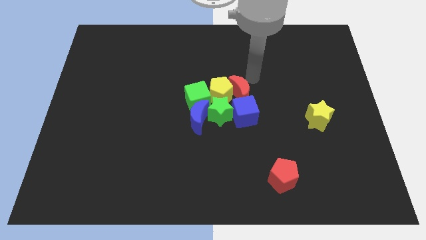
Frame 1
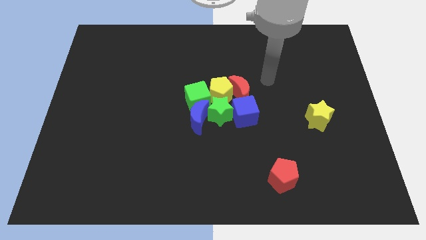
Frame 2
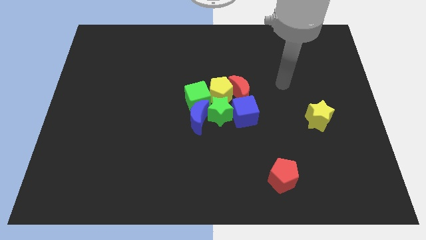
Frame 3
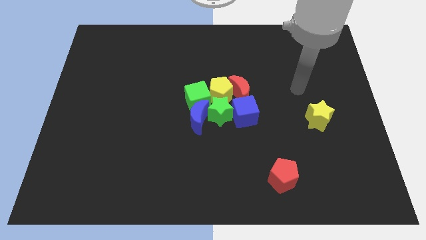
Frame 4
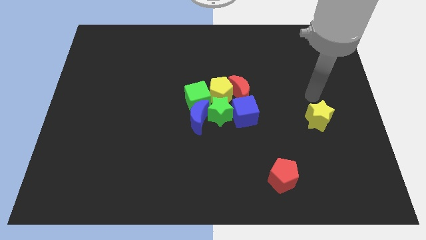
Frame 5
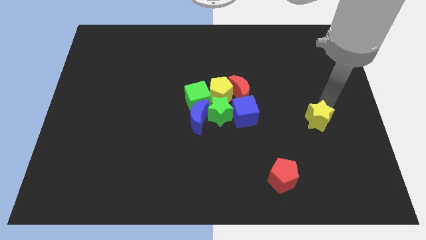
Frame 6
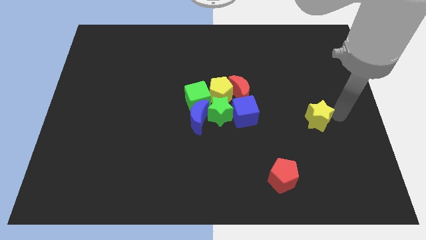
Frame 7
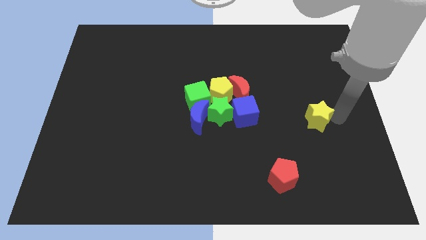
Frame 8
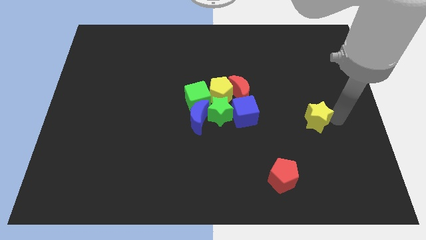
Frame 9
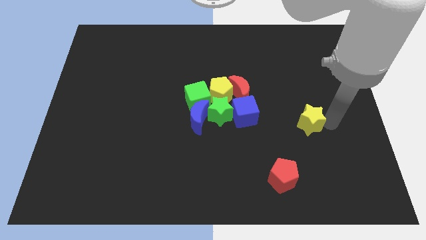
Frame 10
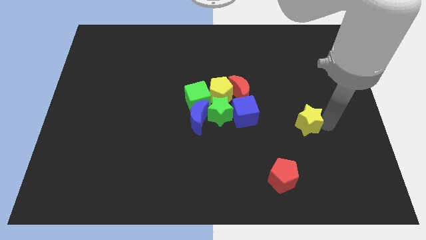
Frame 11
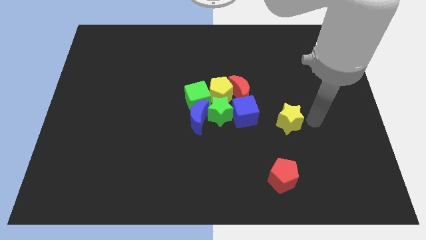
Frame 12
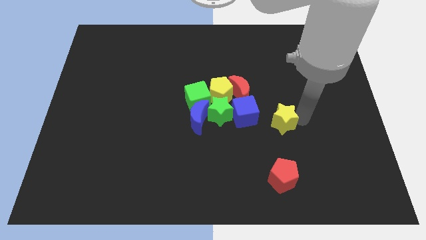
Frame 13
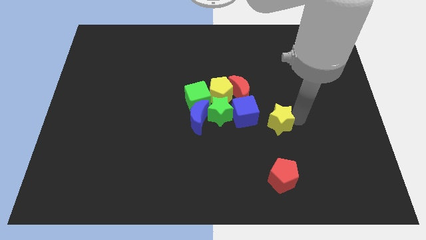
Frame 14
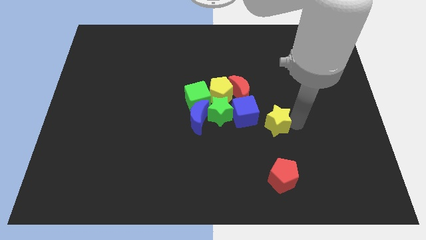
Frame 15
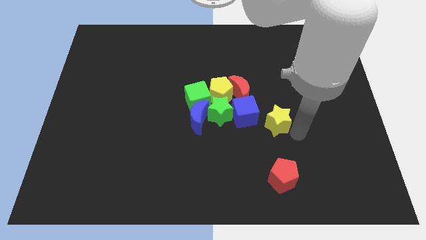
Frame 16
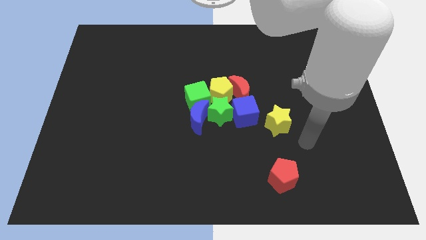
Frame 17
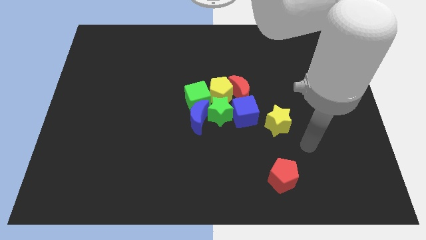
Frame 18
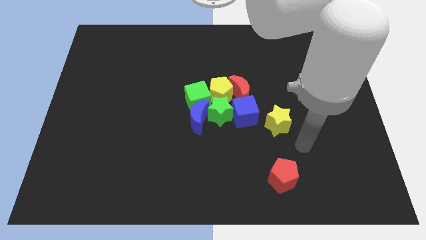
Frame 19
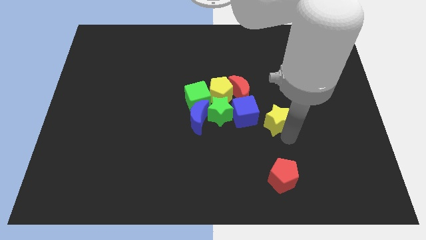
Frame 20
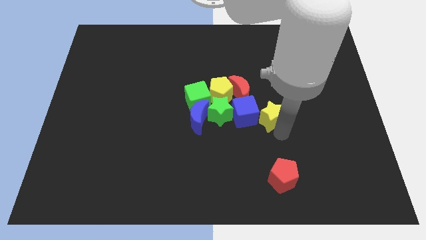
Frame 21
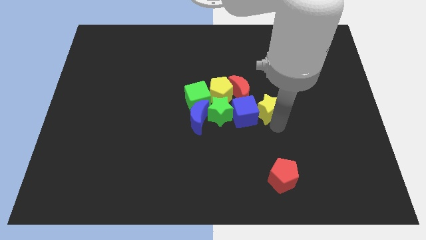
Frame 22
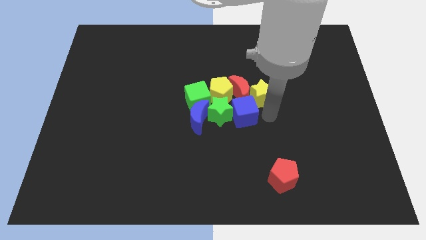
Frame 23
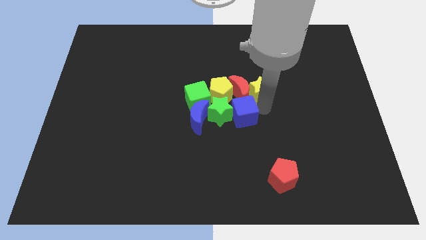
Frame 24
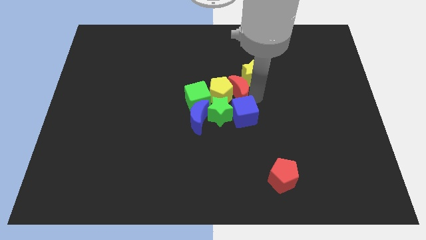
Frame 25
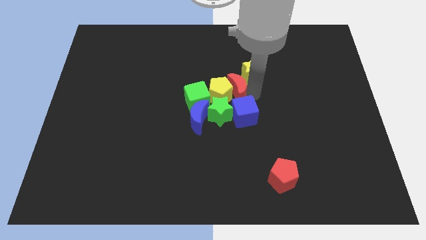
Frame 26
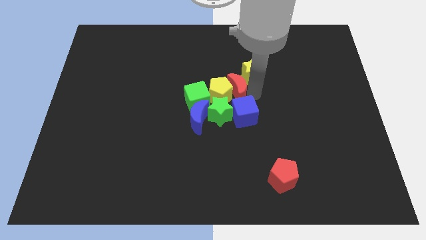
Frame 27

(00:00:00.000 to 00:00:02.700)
push the yellow star towards the red moon

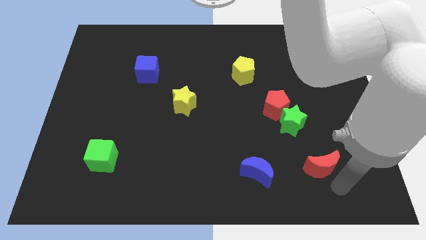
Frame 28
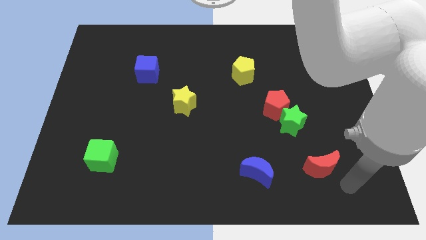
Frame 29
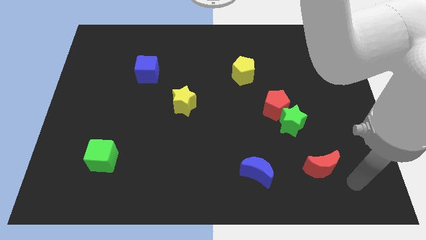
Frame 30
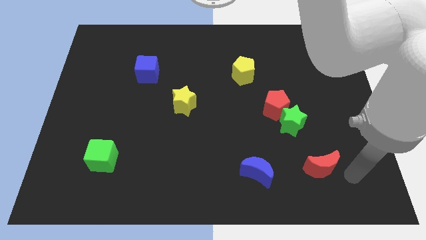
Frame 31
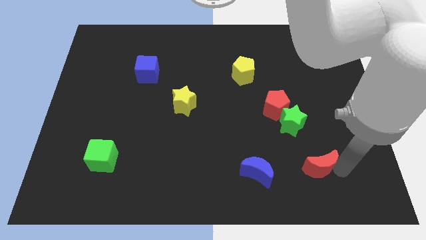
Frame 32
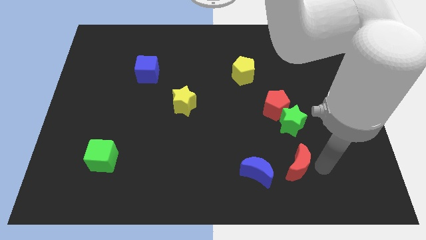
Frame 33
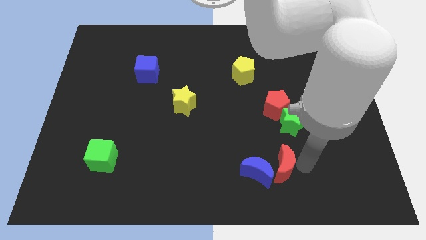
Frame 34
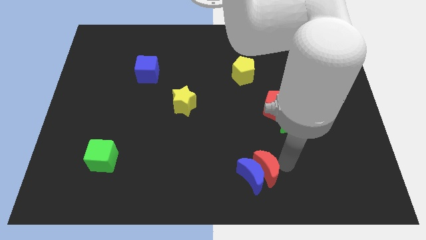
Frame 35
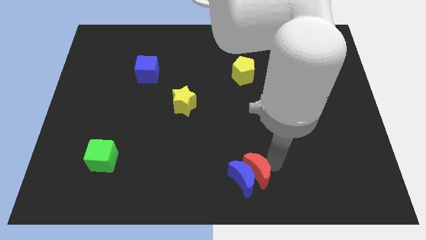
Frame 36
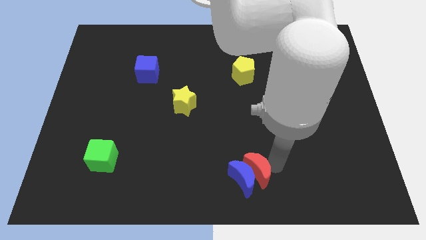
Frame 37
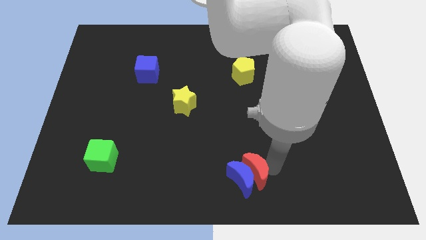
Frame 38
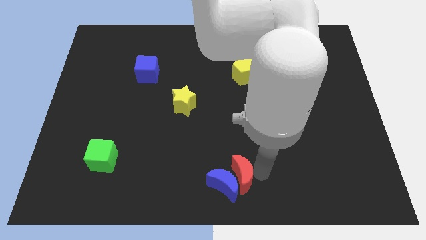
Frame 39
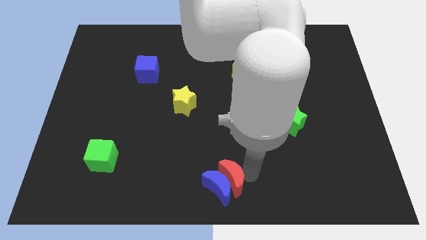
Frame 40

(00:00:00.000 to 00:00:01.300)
move the red moon into the blue moon

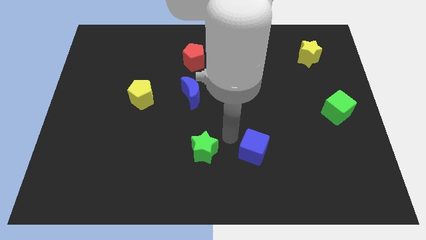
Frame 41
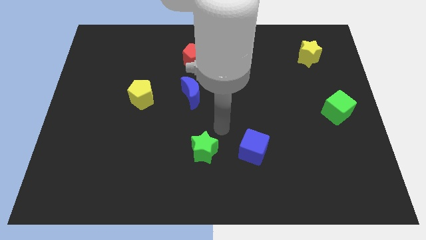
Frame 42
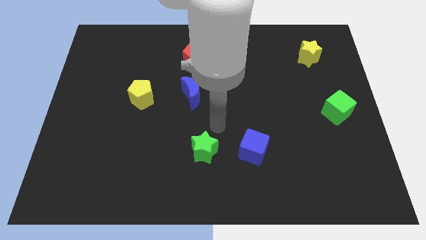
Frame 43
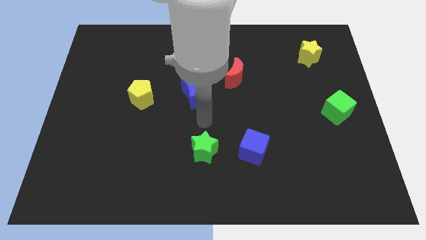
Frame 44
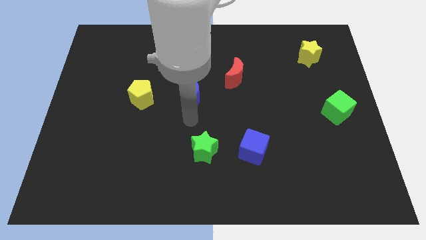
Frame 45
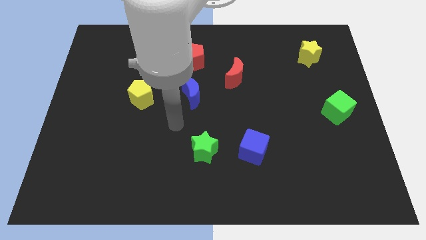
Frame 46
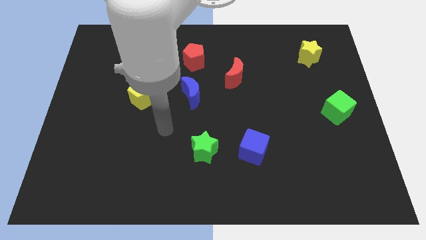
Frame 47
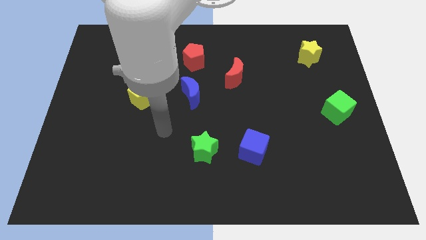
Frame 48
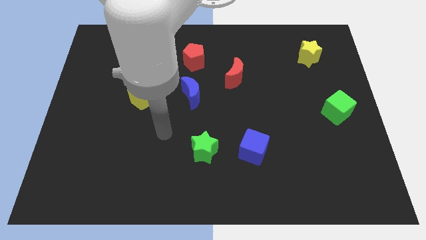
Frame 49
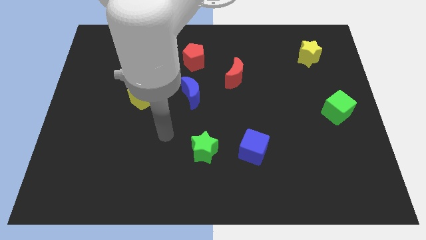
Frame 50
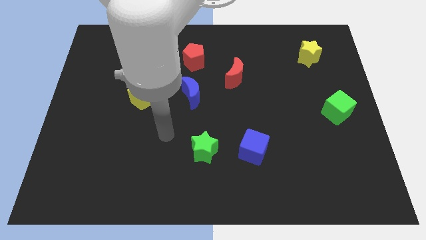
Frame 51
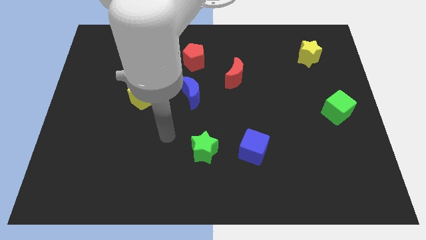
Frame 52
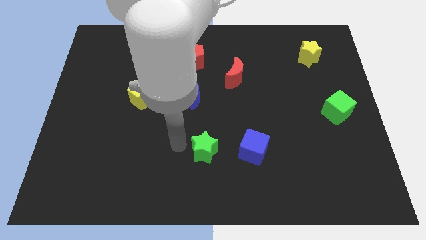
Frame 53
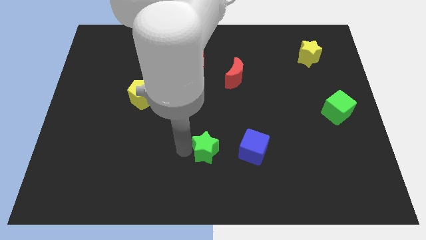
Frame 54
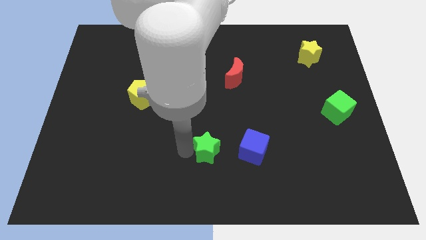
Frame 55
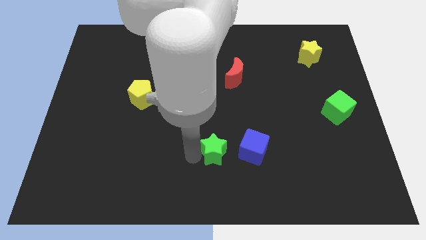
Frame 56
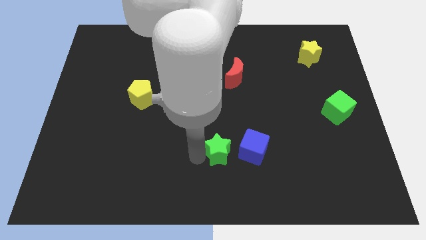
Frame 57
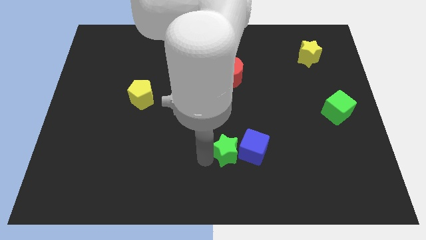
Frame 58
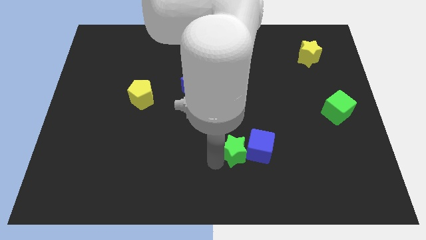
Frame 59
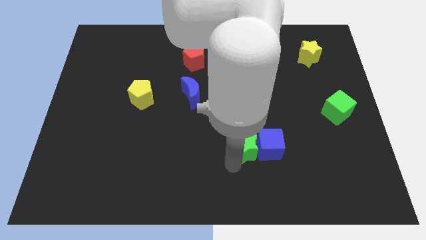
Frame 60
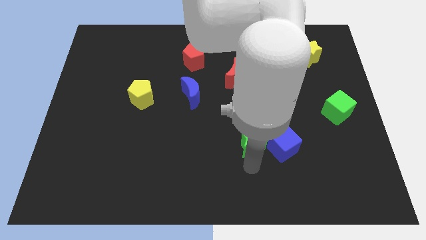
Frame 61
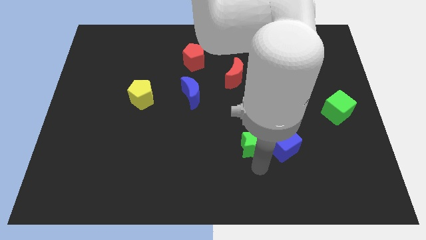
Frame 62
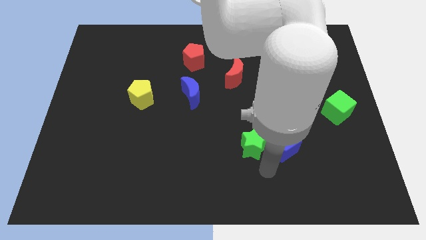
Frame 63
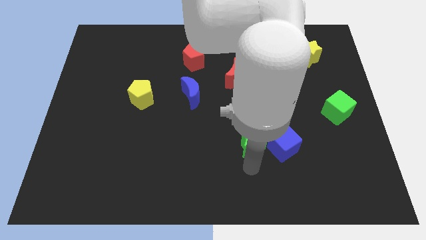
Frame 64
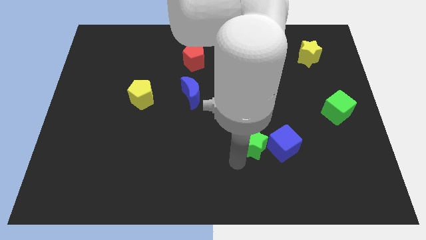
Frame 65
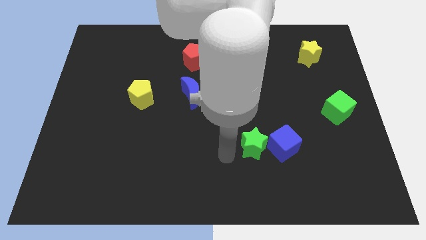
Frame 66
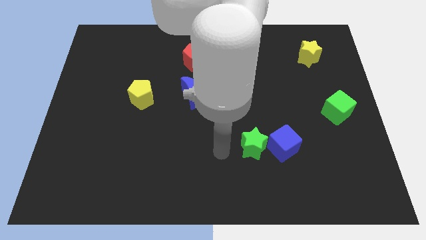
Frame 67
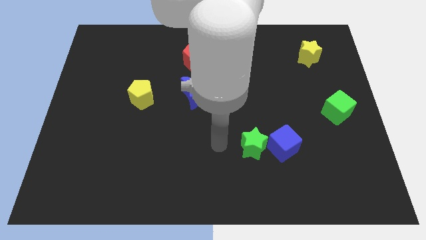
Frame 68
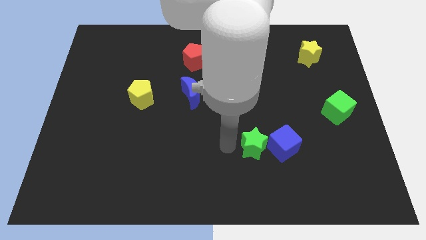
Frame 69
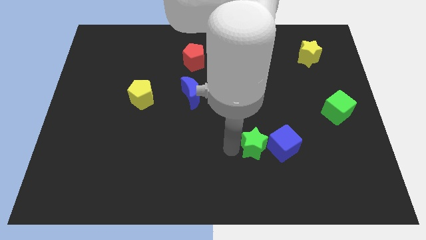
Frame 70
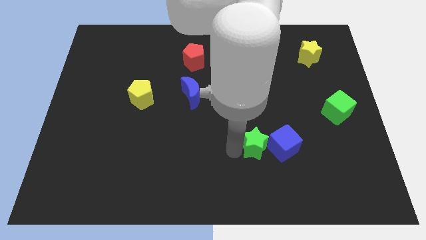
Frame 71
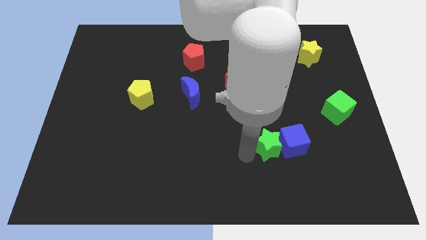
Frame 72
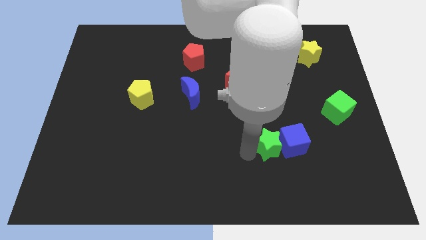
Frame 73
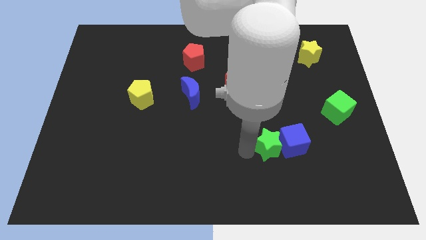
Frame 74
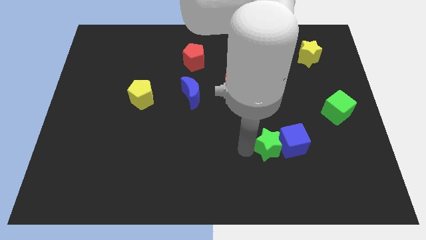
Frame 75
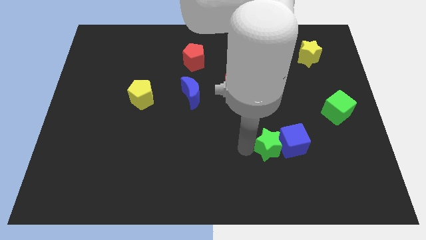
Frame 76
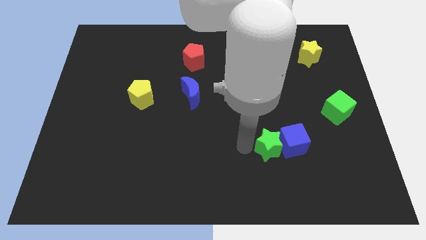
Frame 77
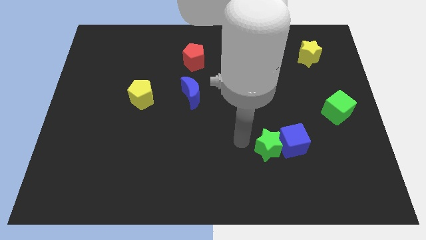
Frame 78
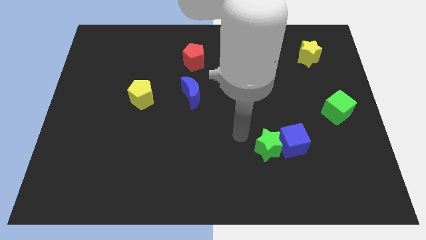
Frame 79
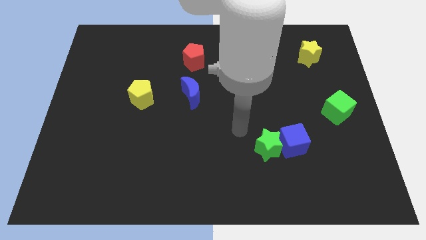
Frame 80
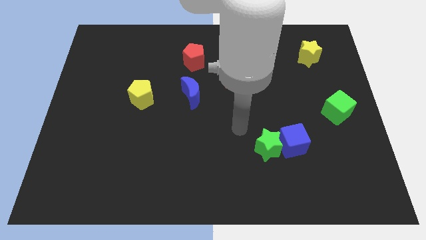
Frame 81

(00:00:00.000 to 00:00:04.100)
push the green star to the bottom left side of the blue cube

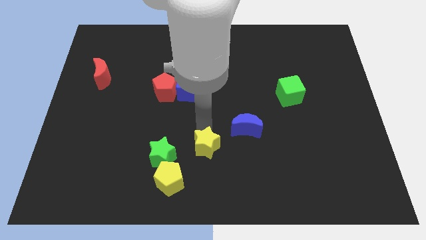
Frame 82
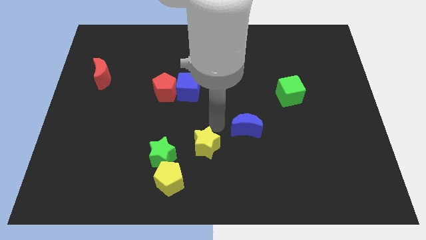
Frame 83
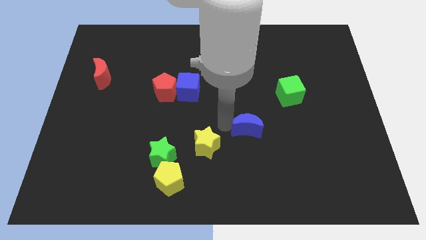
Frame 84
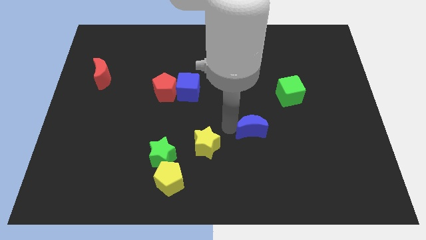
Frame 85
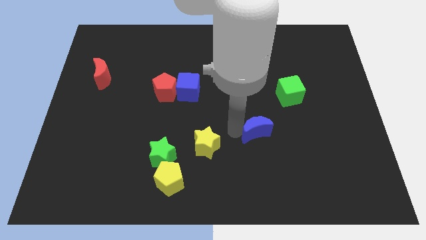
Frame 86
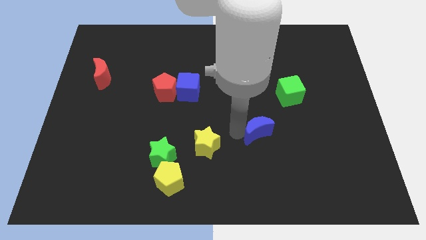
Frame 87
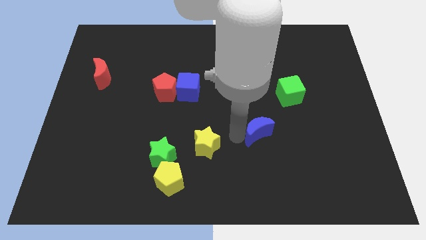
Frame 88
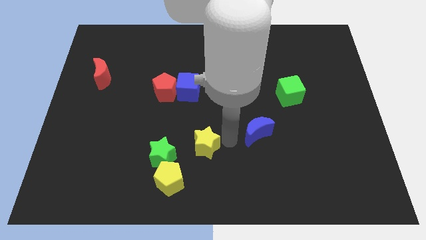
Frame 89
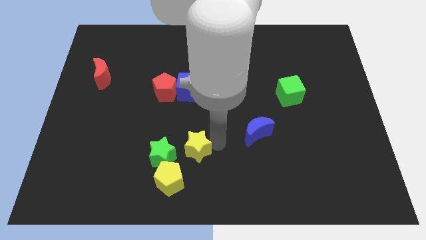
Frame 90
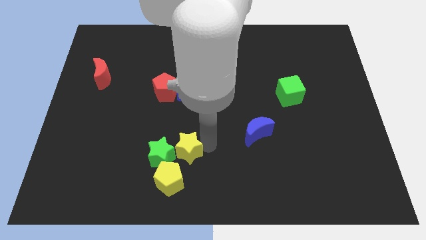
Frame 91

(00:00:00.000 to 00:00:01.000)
move the blue moon slightly to the right of the board
